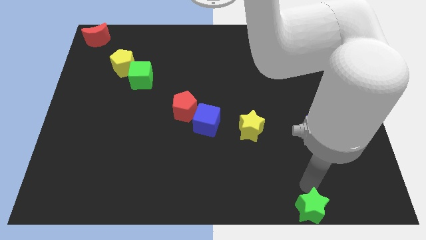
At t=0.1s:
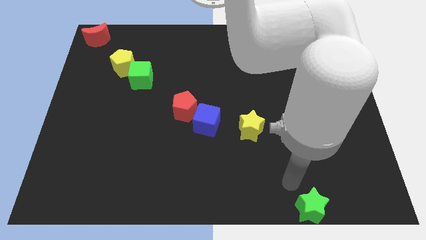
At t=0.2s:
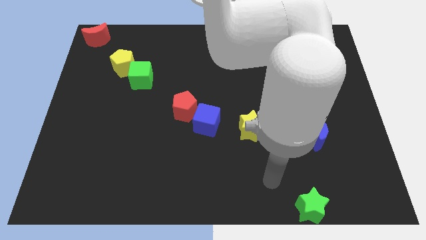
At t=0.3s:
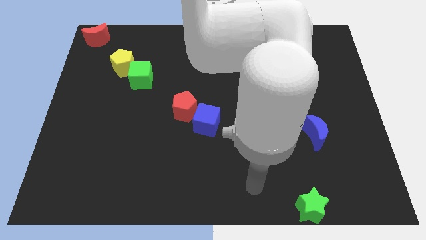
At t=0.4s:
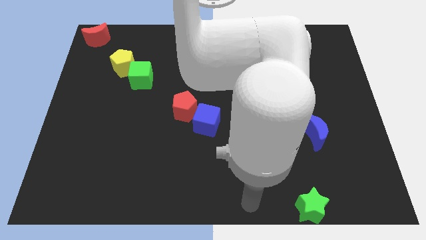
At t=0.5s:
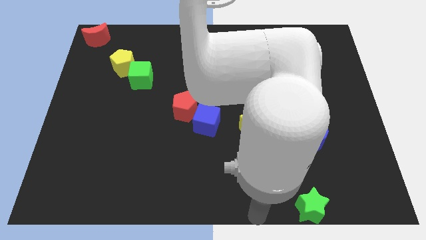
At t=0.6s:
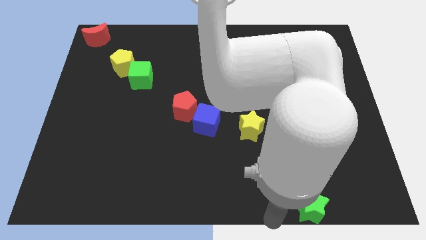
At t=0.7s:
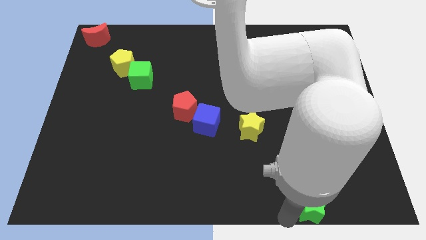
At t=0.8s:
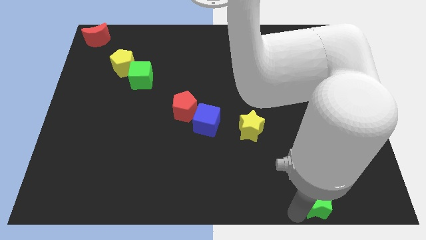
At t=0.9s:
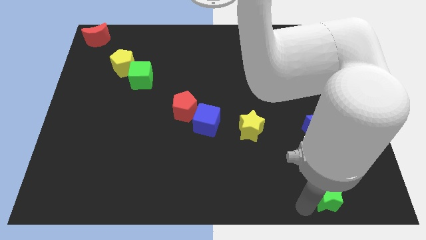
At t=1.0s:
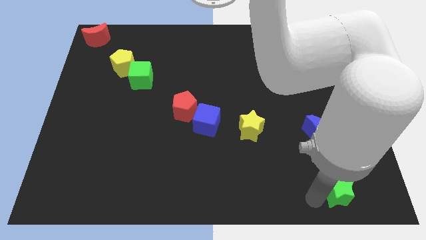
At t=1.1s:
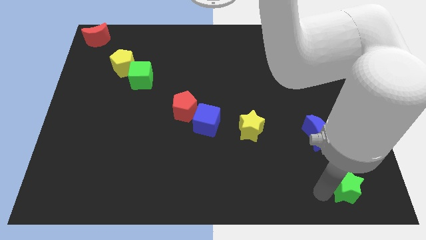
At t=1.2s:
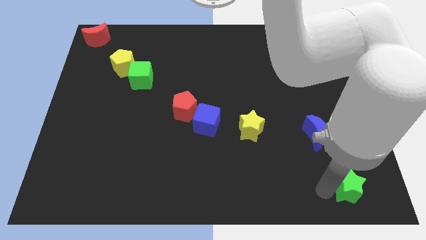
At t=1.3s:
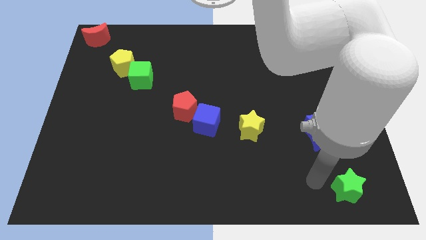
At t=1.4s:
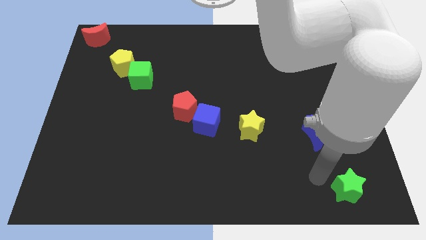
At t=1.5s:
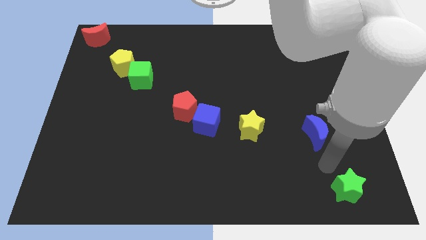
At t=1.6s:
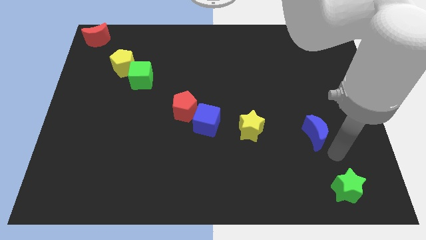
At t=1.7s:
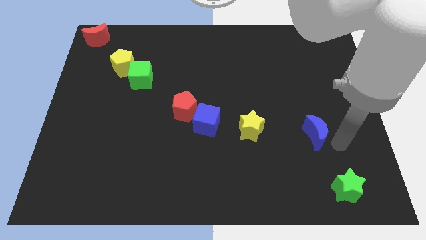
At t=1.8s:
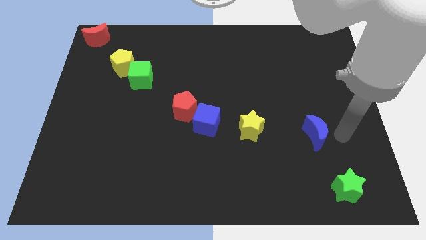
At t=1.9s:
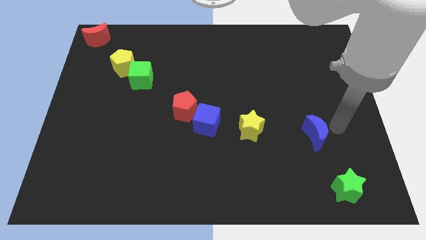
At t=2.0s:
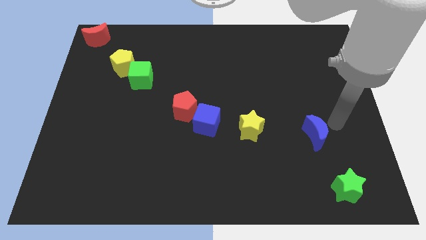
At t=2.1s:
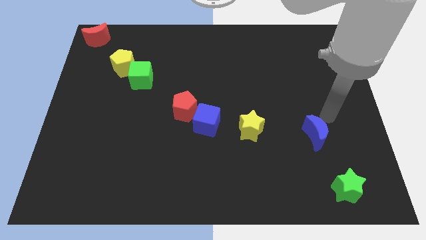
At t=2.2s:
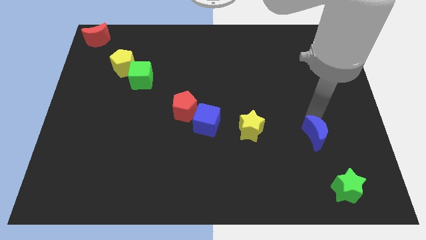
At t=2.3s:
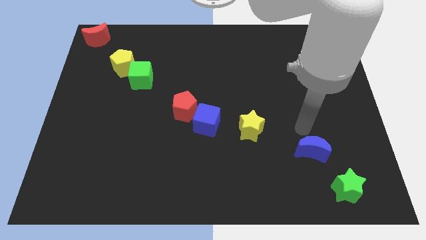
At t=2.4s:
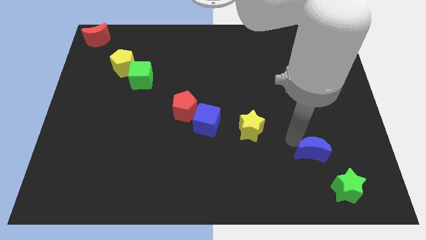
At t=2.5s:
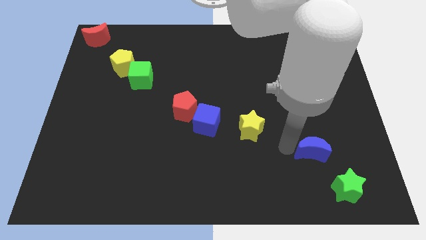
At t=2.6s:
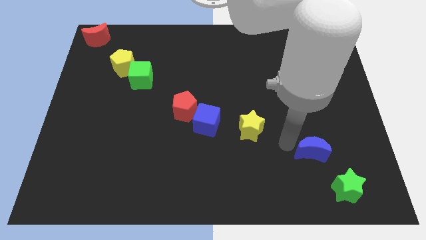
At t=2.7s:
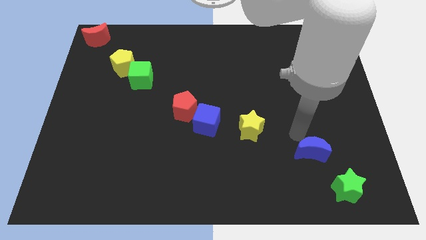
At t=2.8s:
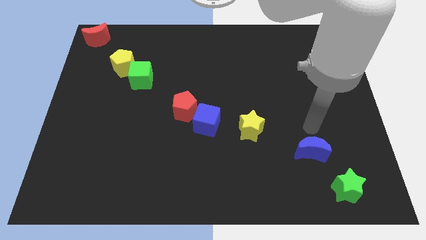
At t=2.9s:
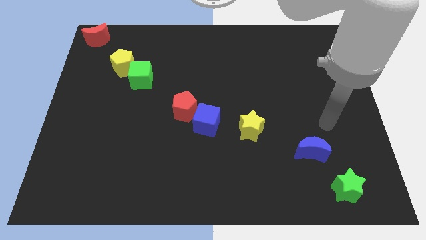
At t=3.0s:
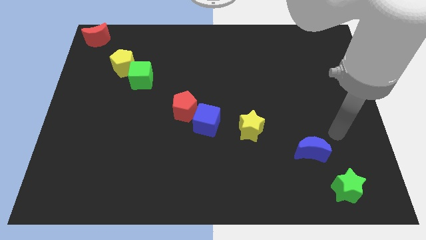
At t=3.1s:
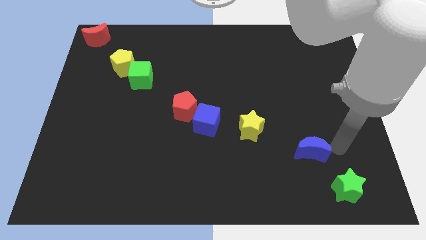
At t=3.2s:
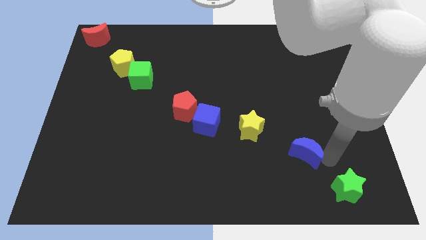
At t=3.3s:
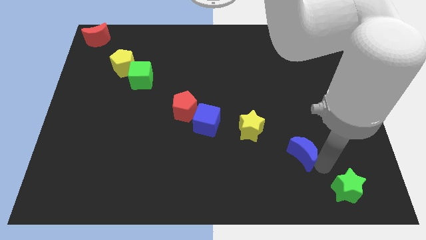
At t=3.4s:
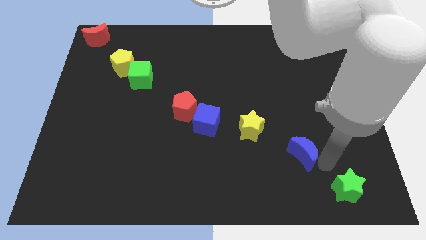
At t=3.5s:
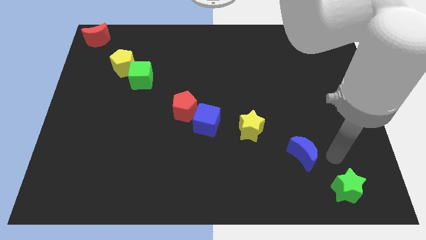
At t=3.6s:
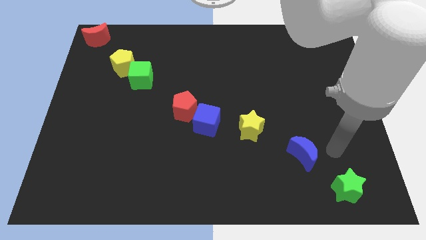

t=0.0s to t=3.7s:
line up the green star blue moon and yellow star diagonally

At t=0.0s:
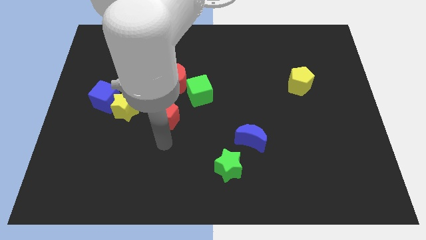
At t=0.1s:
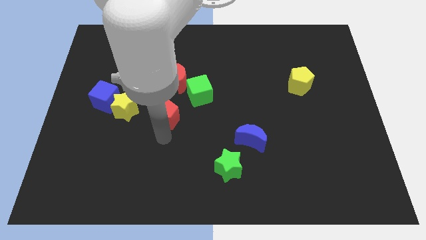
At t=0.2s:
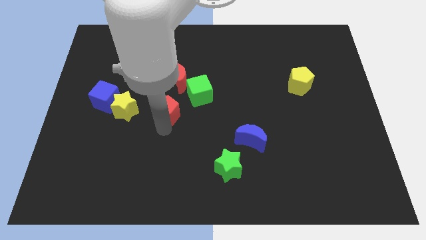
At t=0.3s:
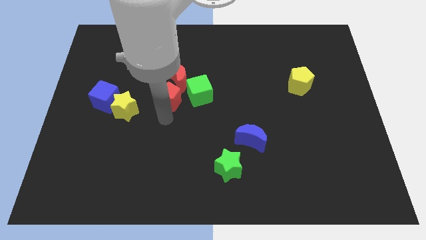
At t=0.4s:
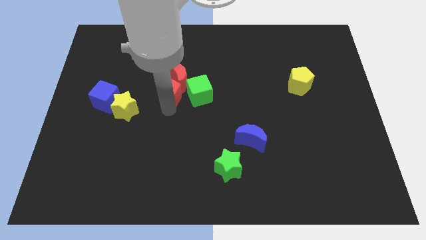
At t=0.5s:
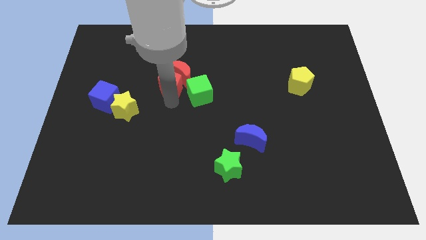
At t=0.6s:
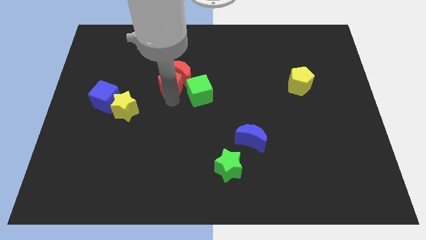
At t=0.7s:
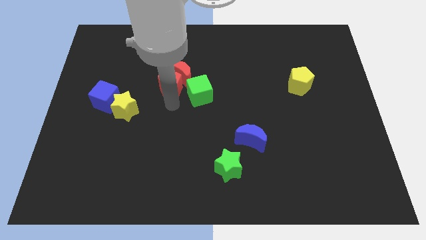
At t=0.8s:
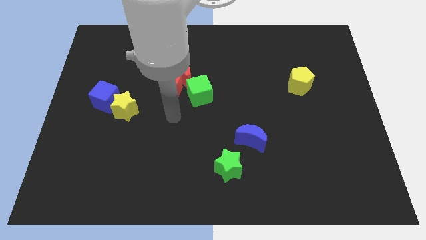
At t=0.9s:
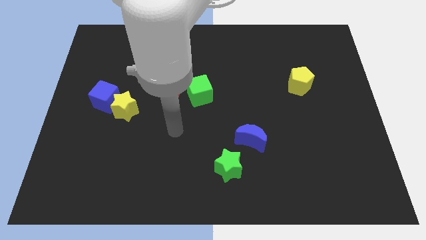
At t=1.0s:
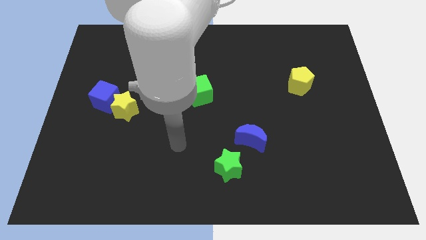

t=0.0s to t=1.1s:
push the red pentagon into the red moon

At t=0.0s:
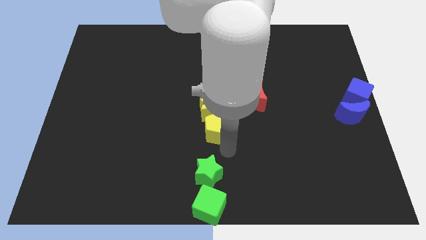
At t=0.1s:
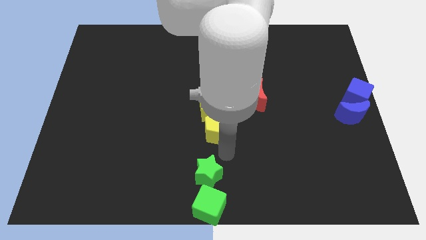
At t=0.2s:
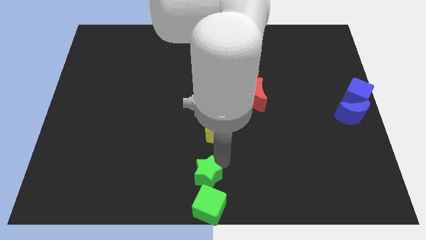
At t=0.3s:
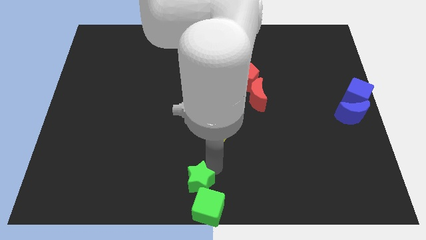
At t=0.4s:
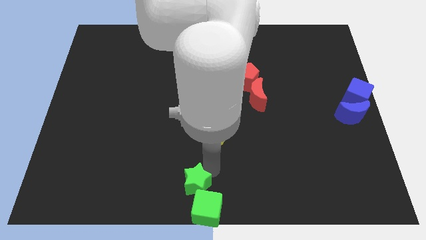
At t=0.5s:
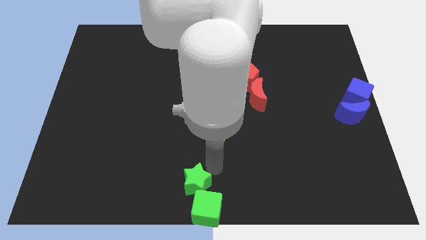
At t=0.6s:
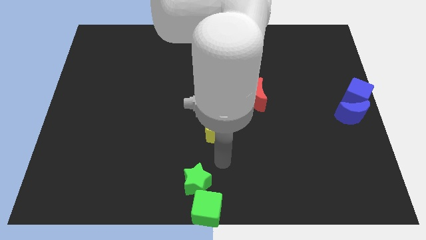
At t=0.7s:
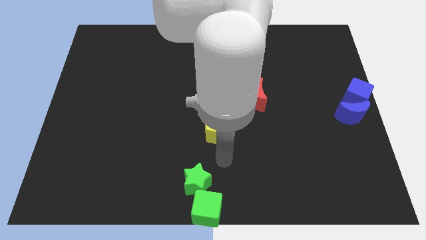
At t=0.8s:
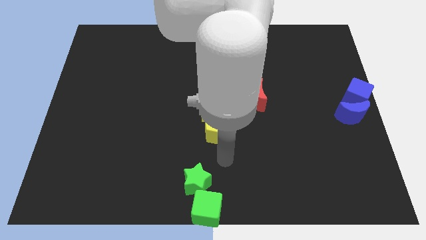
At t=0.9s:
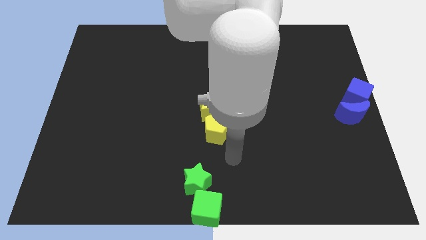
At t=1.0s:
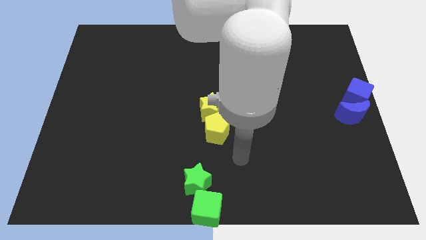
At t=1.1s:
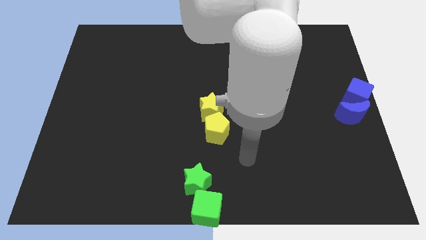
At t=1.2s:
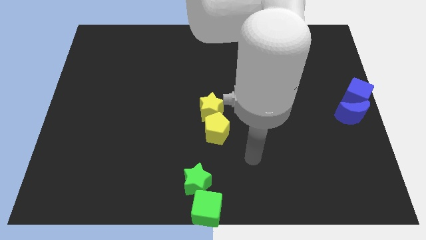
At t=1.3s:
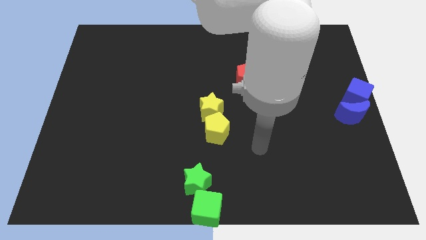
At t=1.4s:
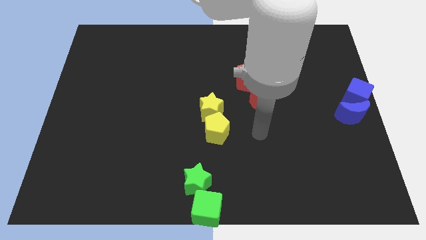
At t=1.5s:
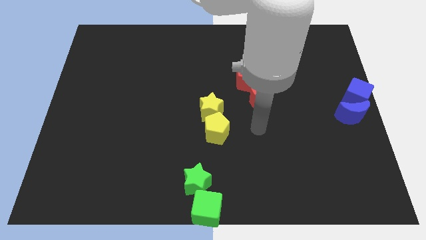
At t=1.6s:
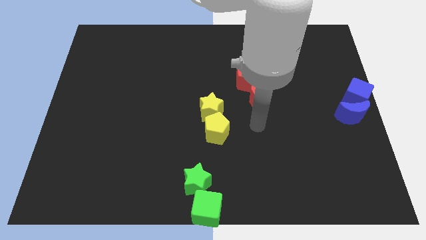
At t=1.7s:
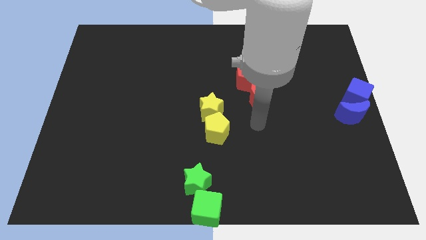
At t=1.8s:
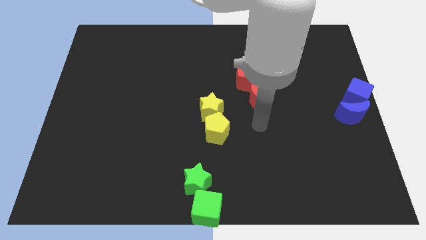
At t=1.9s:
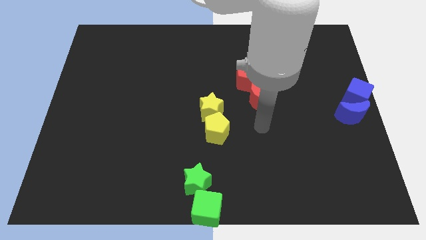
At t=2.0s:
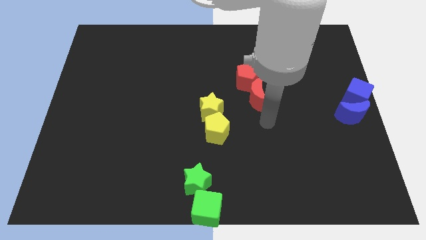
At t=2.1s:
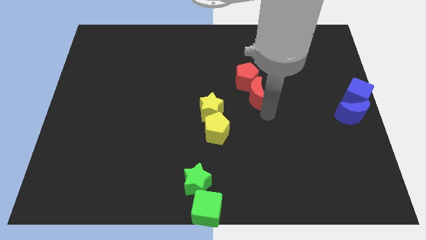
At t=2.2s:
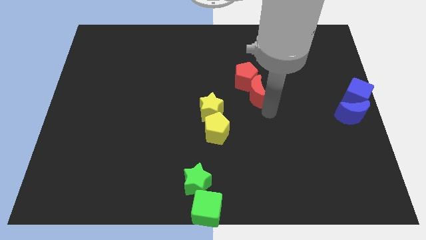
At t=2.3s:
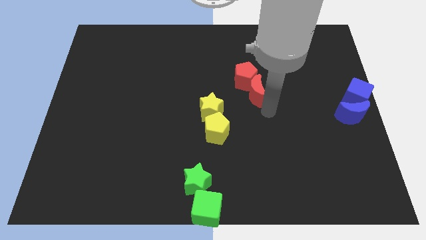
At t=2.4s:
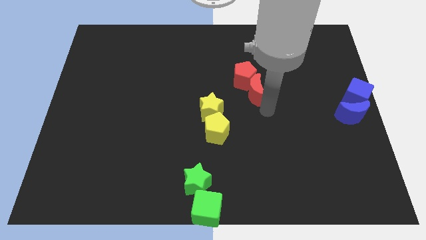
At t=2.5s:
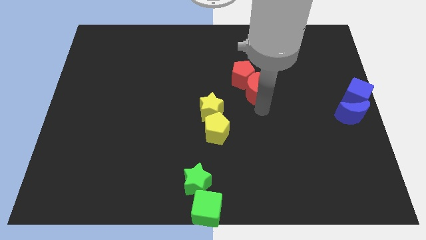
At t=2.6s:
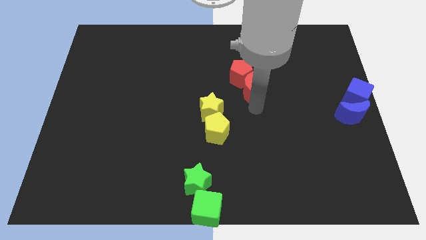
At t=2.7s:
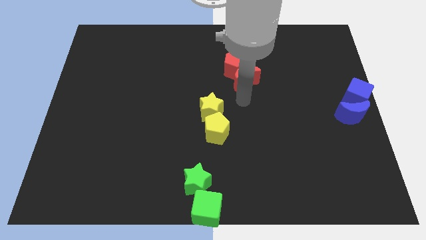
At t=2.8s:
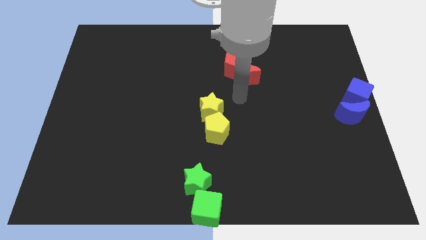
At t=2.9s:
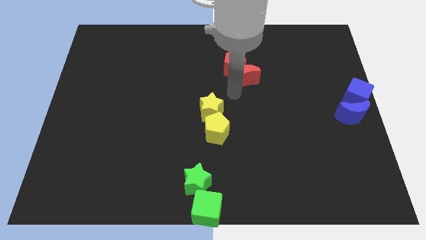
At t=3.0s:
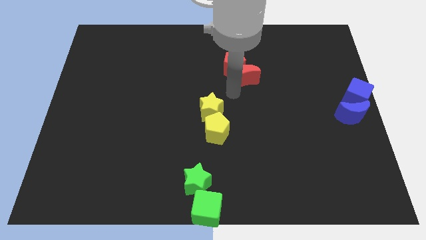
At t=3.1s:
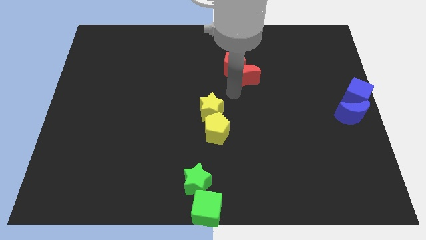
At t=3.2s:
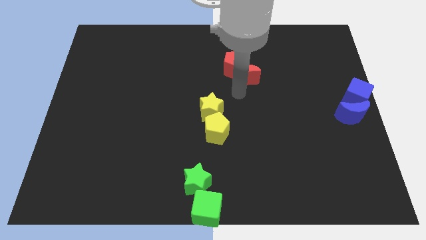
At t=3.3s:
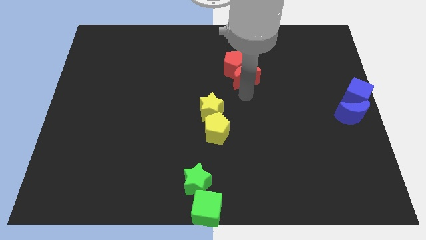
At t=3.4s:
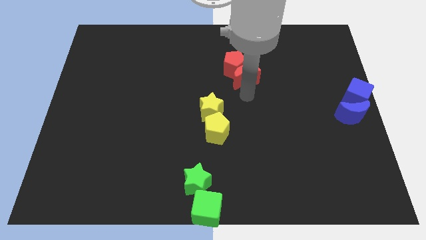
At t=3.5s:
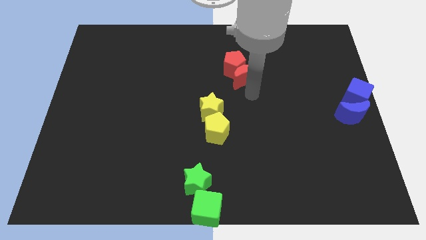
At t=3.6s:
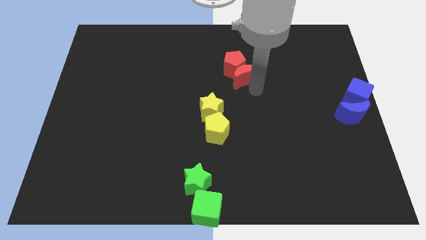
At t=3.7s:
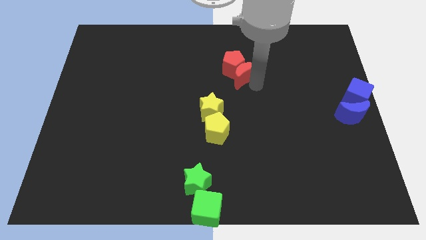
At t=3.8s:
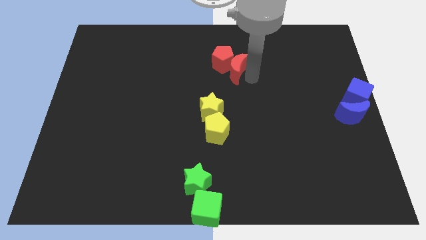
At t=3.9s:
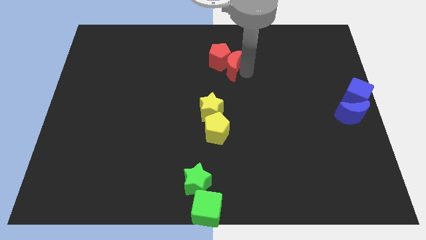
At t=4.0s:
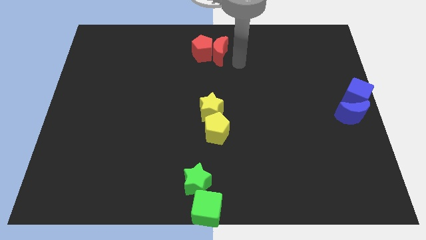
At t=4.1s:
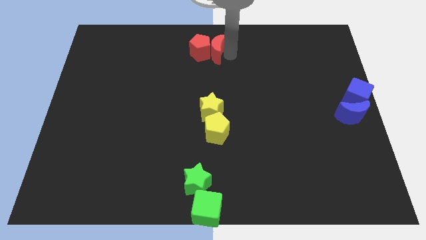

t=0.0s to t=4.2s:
push the red blocks above the yellow blocks

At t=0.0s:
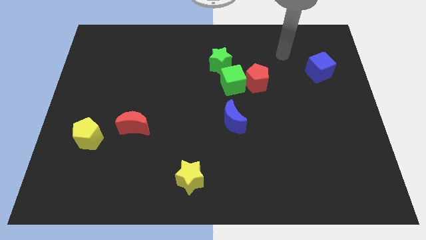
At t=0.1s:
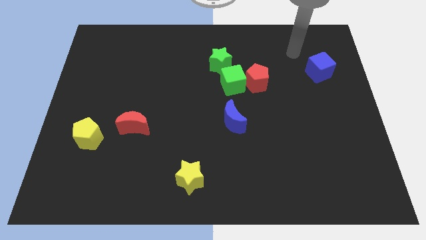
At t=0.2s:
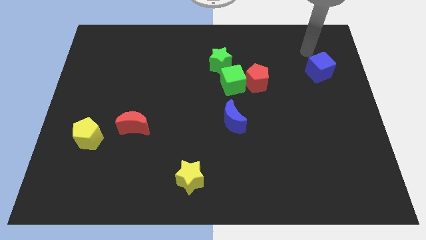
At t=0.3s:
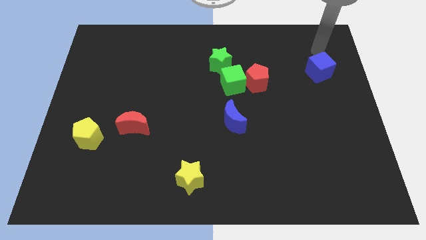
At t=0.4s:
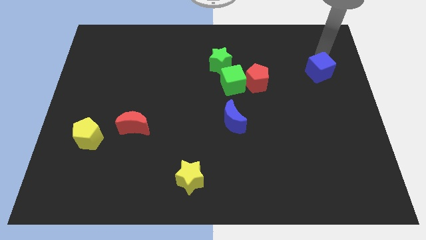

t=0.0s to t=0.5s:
move the arm around the blue cube
